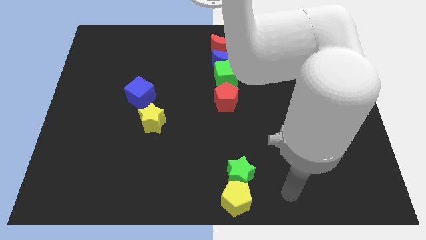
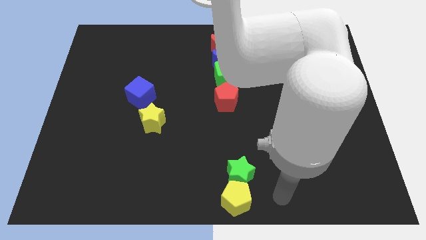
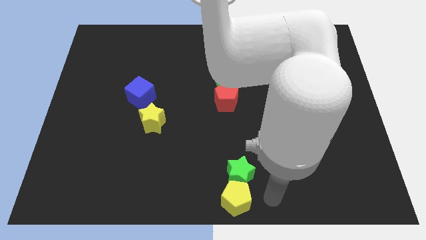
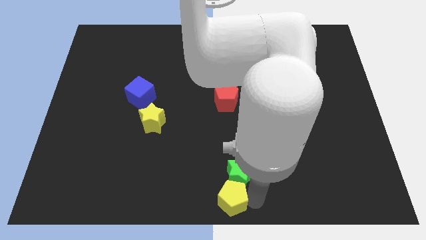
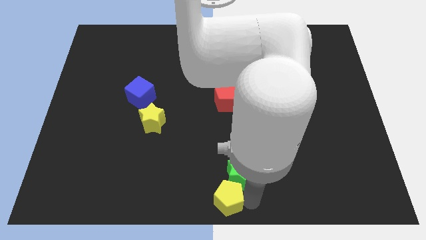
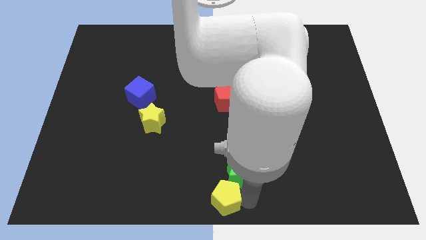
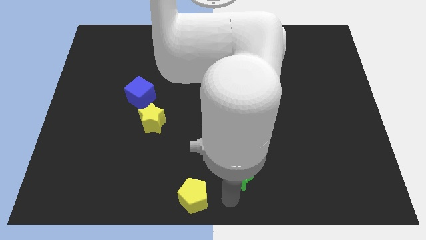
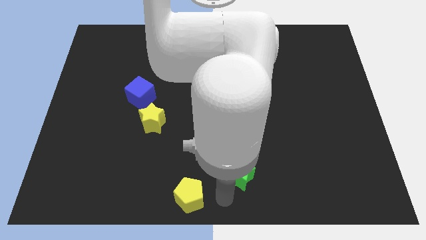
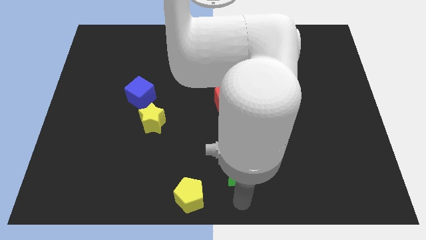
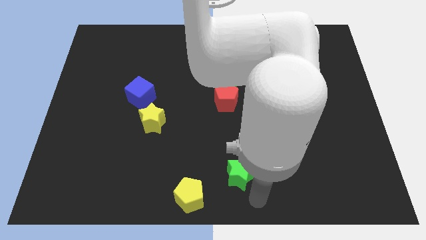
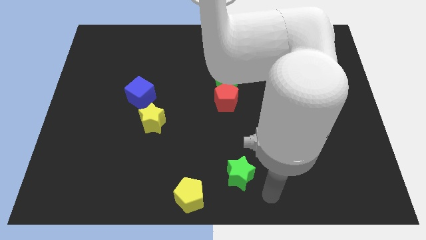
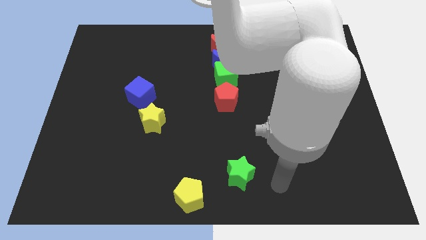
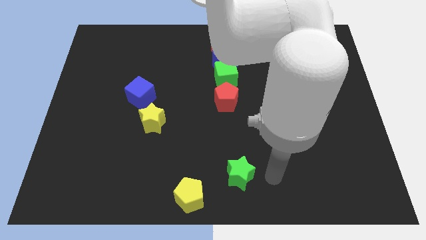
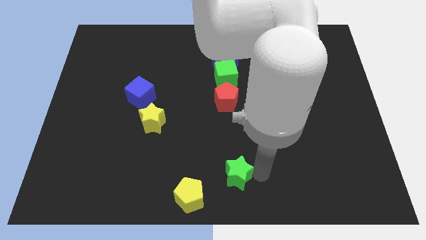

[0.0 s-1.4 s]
separate yellow pentagon from the green star

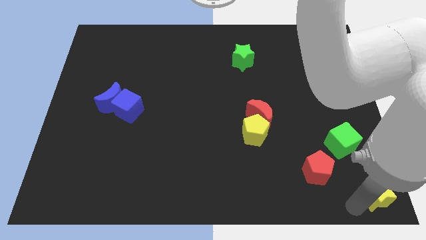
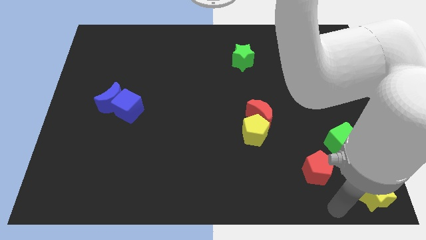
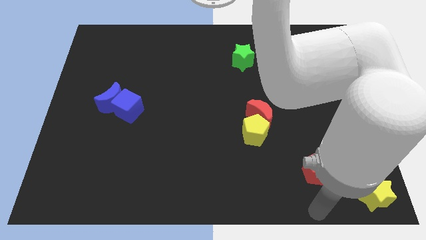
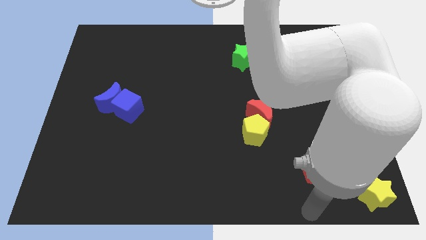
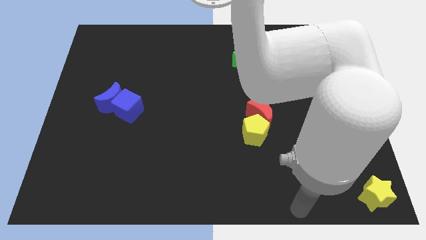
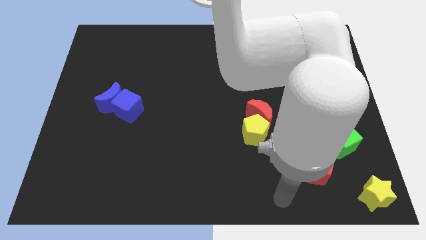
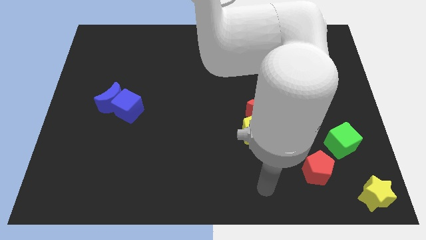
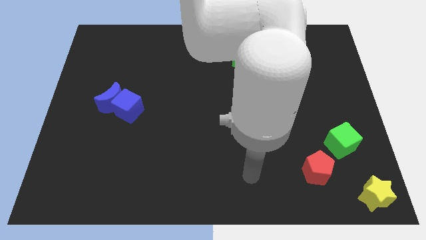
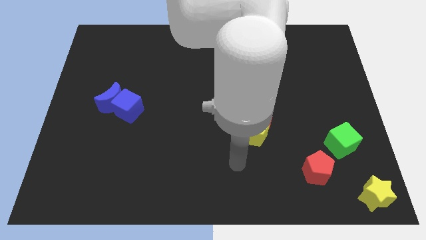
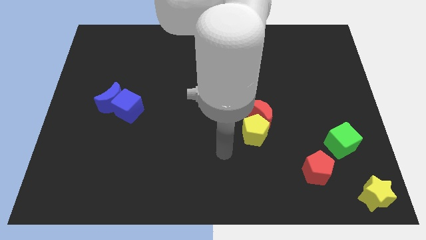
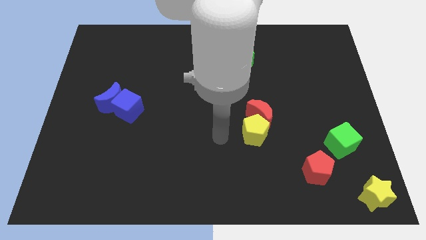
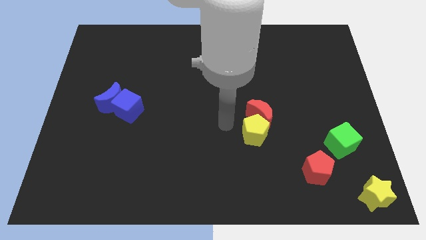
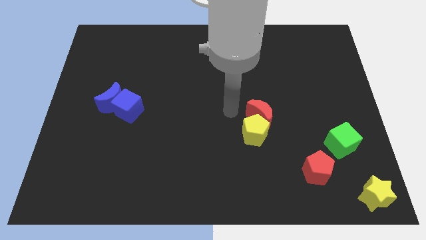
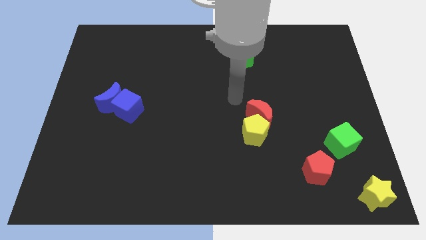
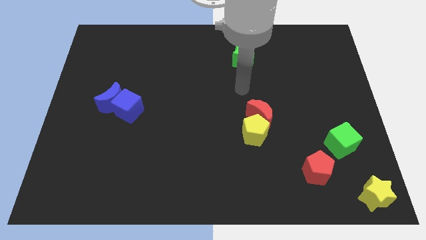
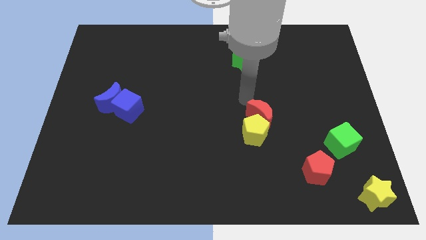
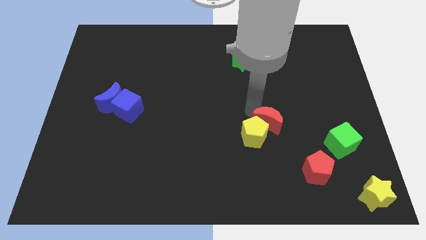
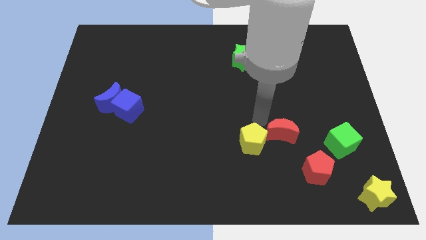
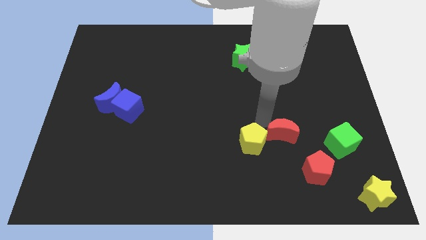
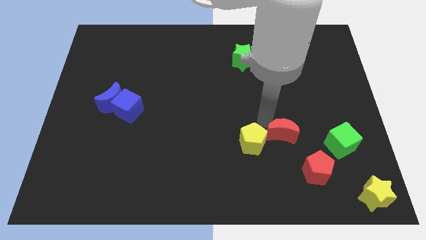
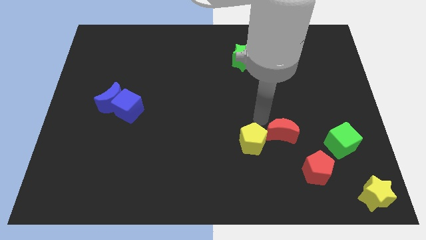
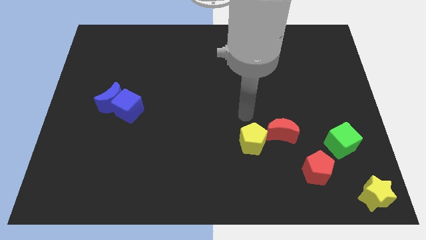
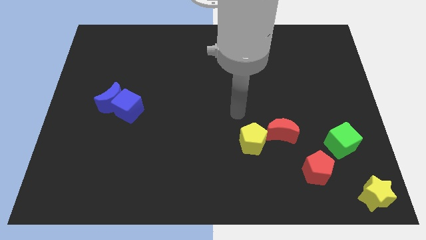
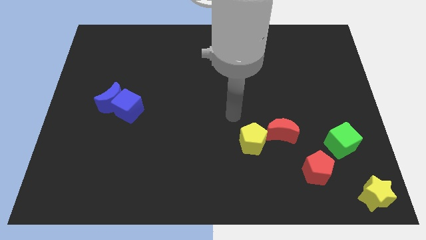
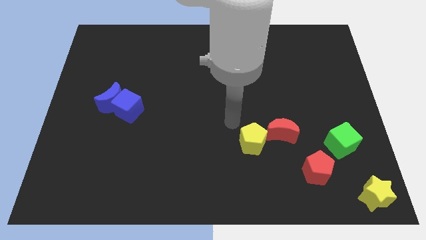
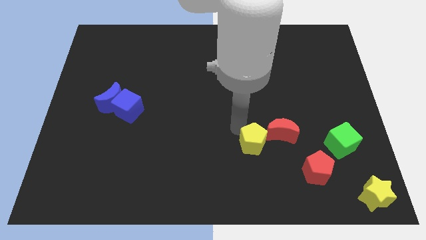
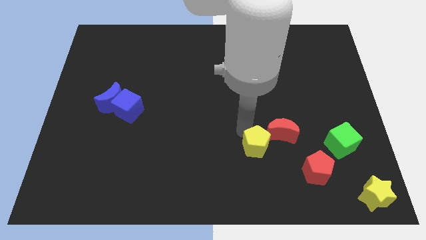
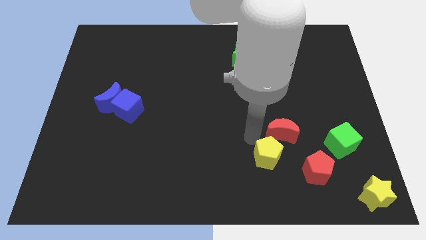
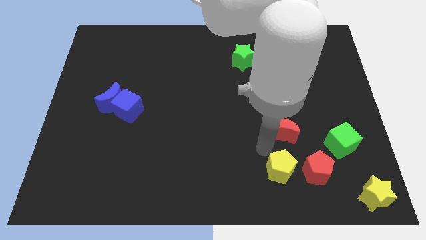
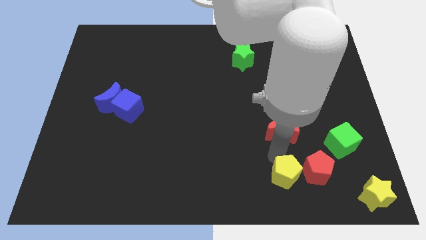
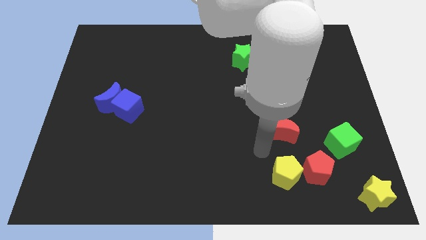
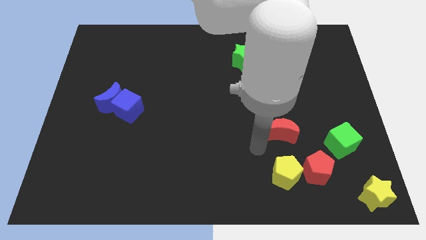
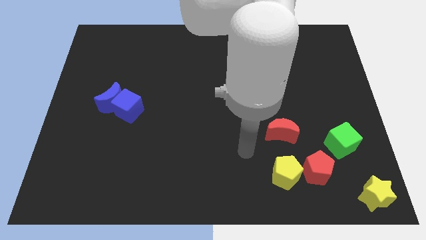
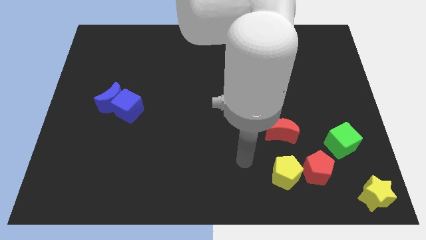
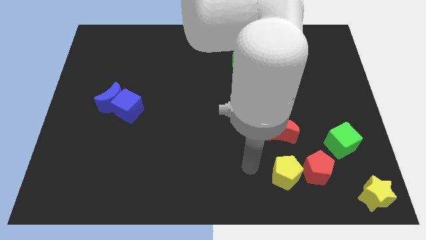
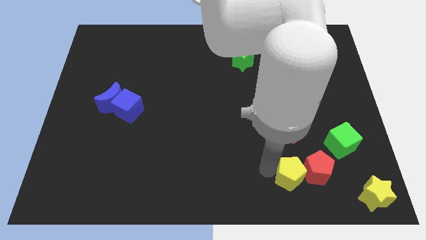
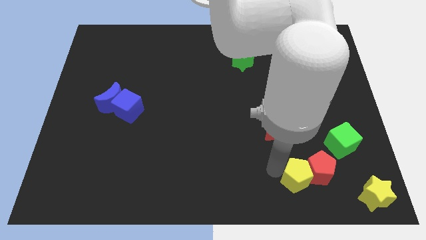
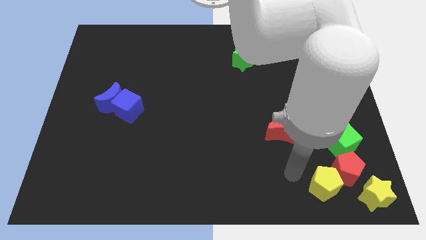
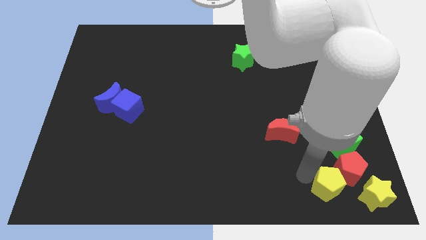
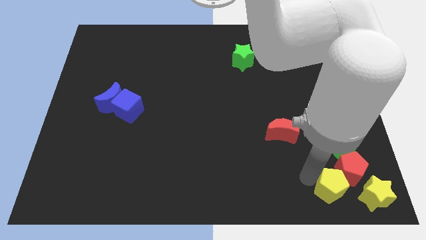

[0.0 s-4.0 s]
push the yellow pentagon into the red pentagon

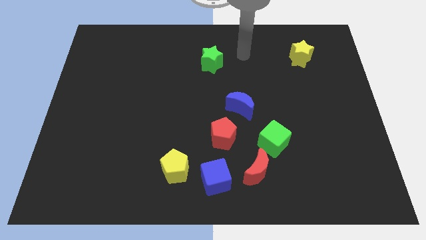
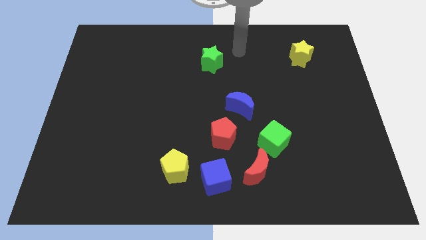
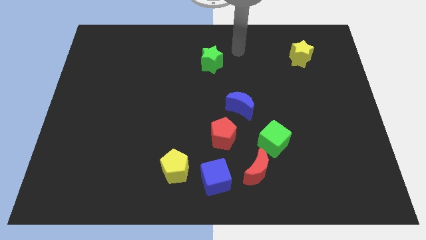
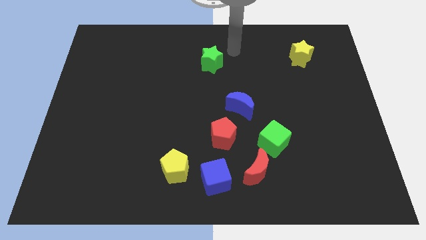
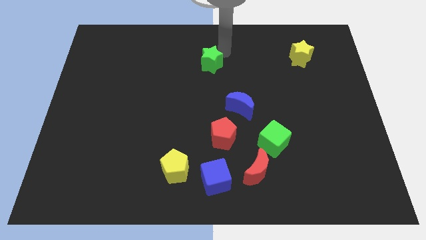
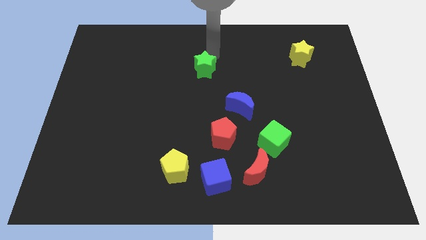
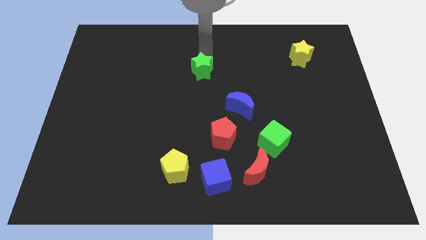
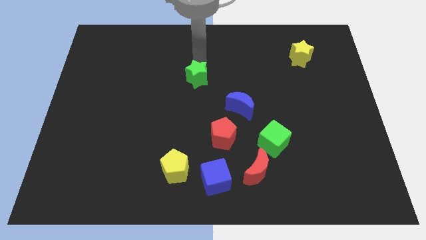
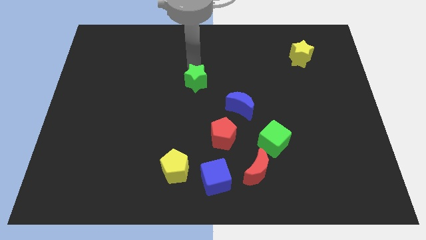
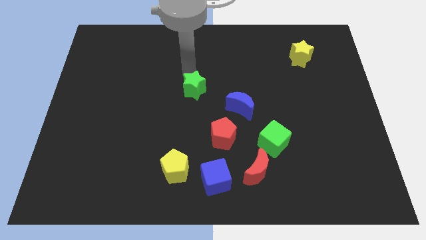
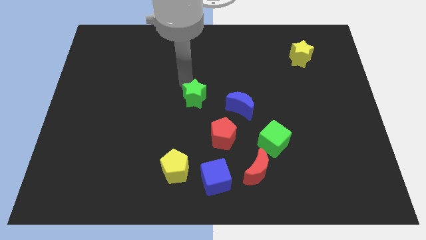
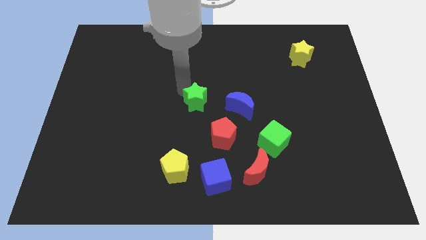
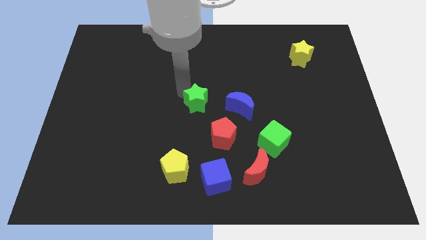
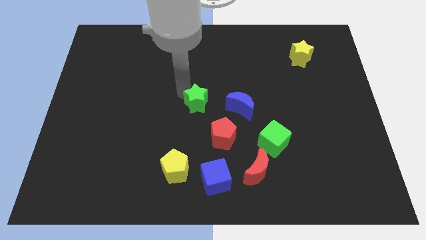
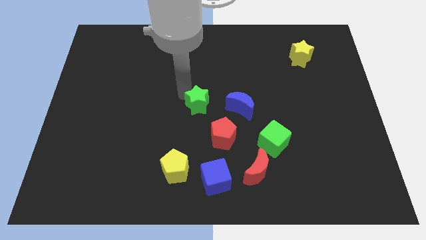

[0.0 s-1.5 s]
move the green star to the left of the blue crescent

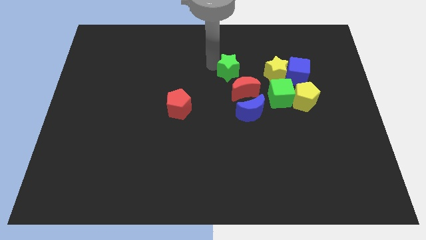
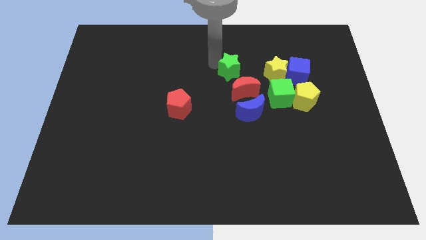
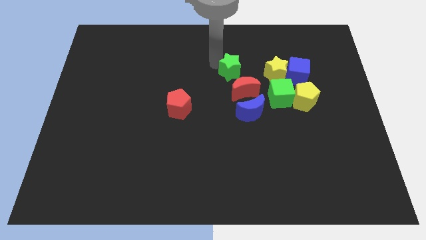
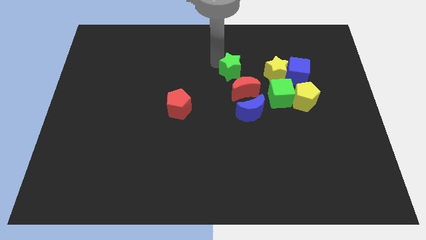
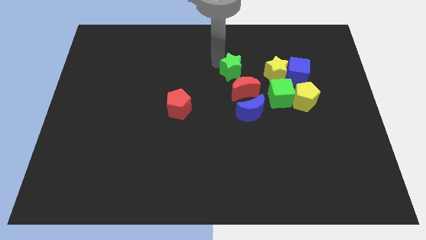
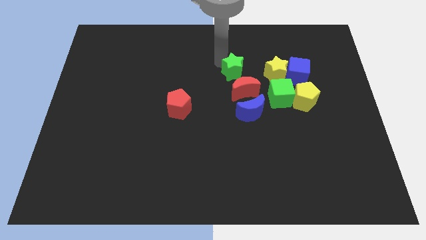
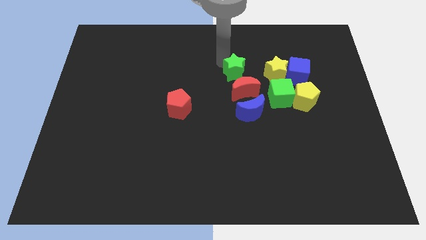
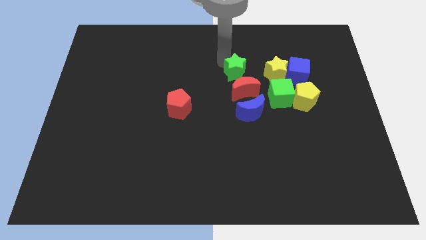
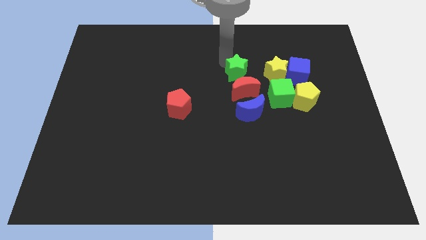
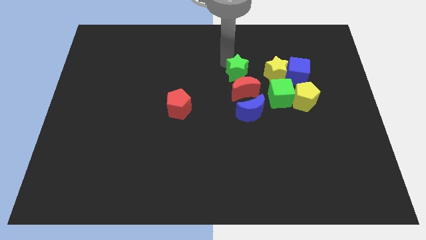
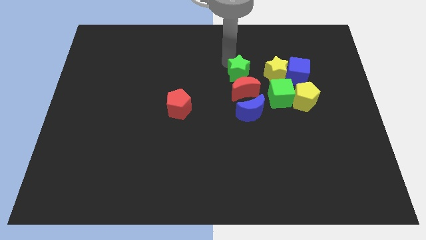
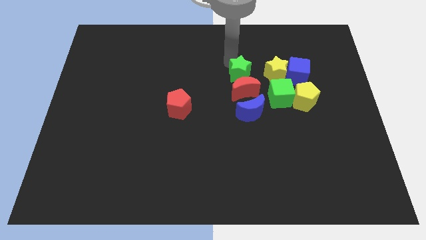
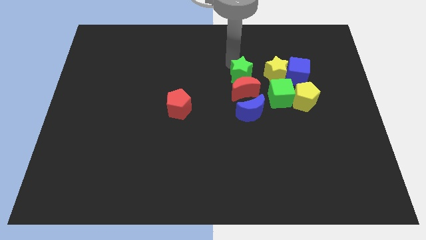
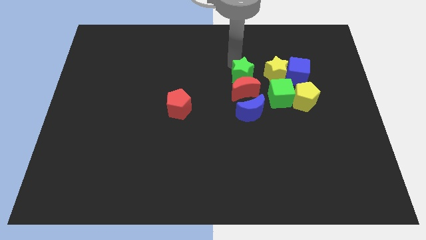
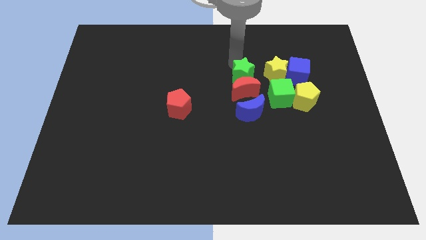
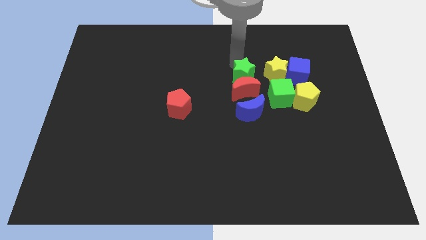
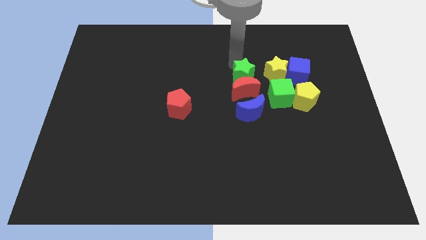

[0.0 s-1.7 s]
place green star to the top of red moon

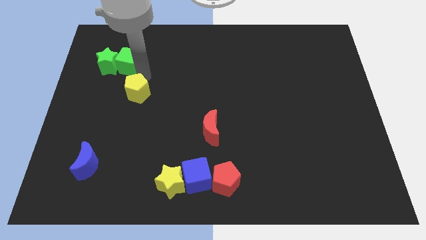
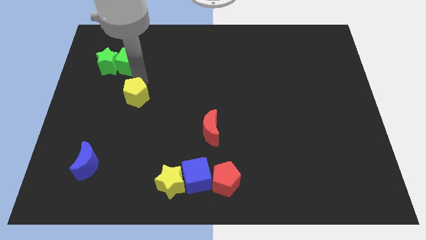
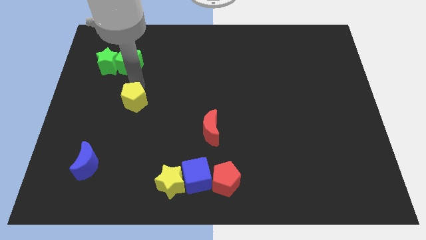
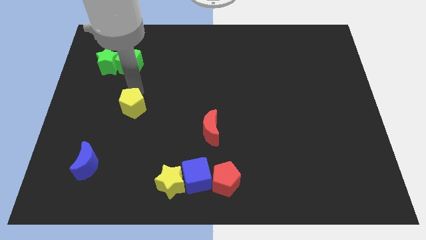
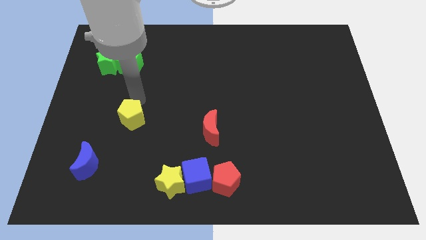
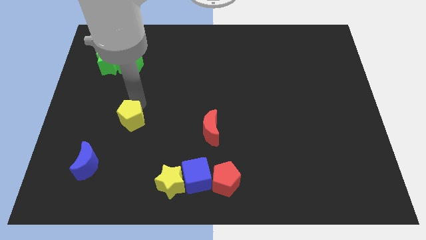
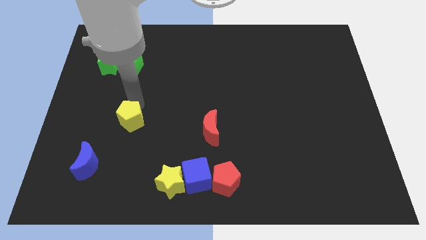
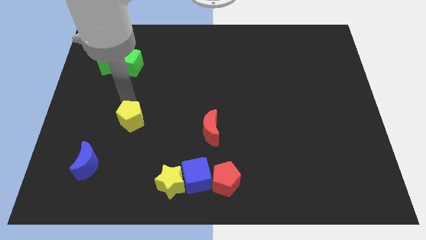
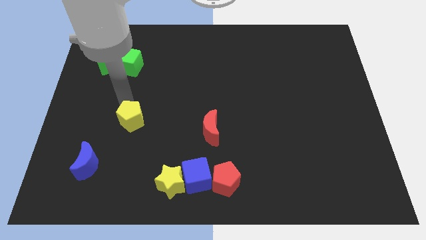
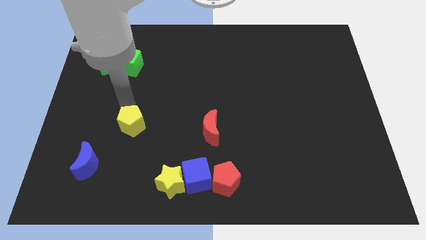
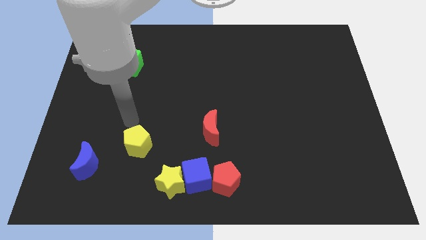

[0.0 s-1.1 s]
push the yellow pentagon towards the bottom
